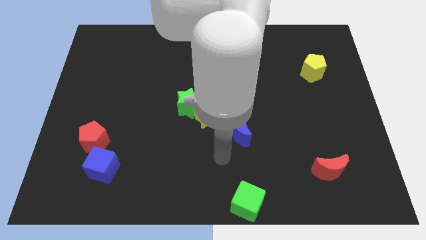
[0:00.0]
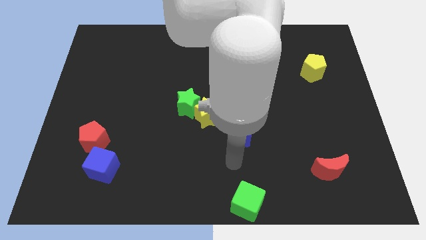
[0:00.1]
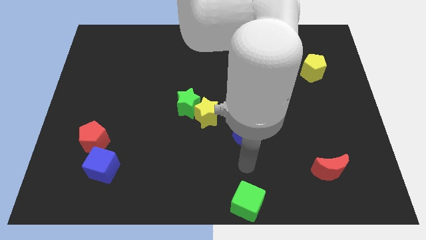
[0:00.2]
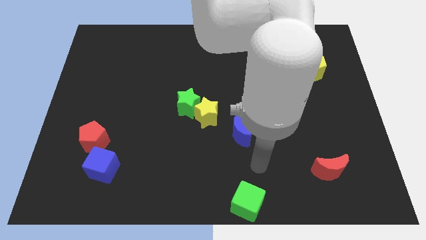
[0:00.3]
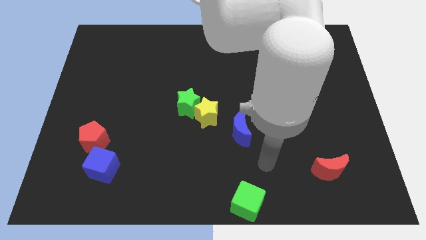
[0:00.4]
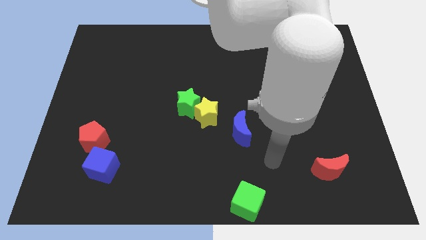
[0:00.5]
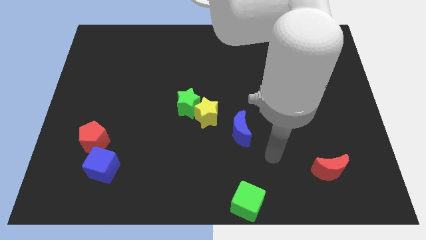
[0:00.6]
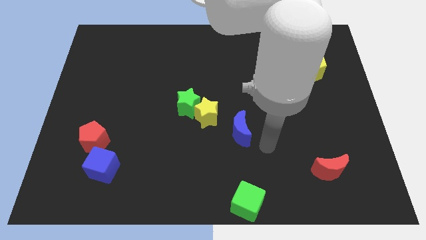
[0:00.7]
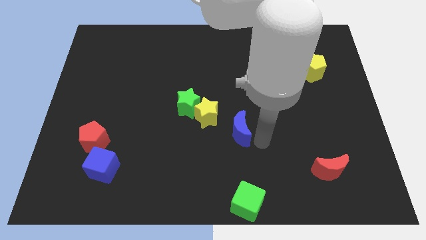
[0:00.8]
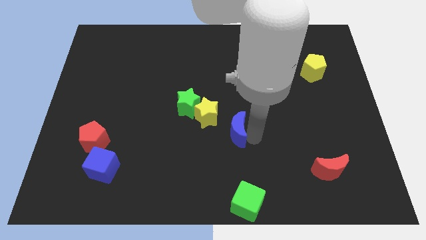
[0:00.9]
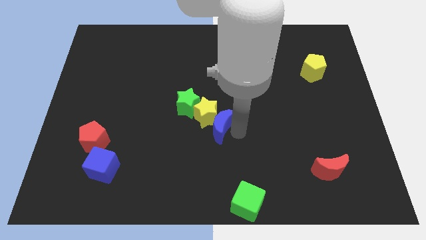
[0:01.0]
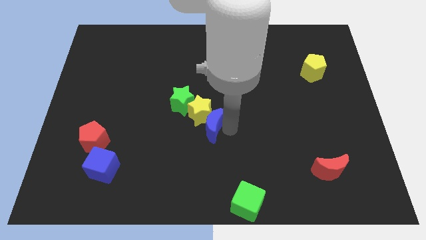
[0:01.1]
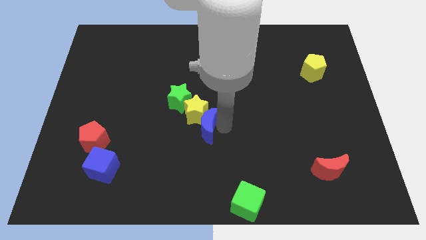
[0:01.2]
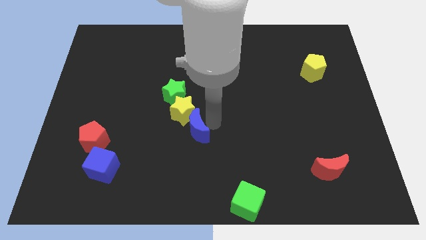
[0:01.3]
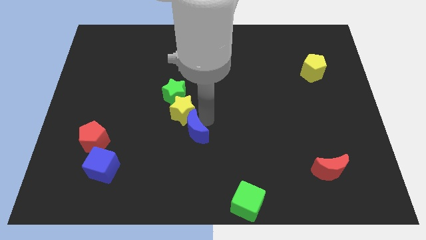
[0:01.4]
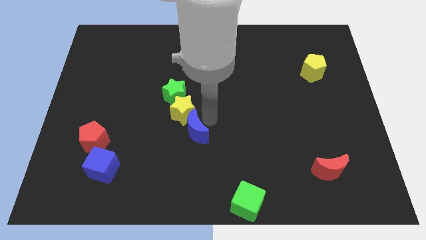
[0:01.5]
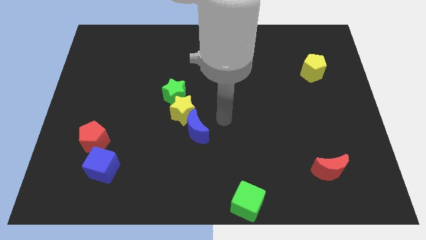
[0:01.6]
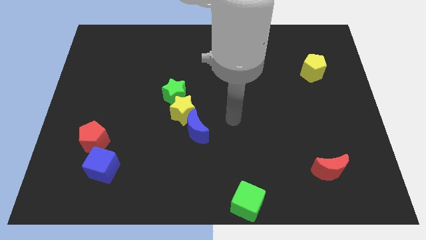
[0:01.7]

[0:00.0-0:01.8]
place blue moon to the bottom of yellow star

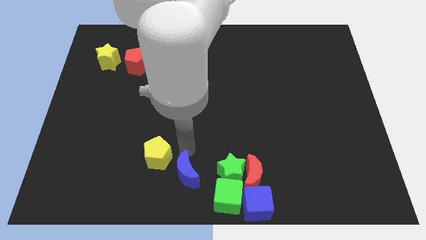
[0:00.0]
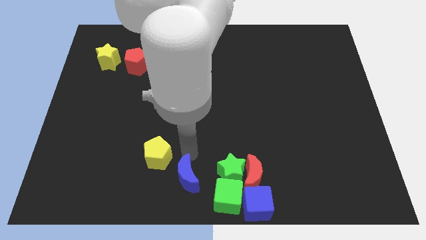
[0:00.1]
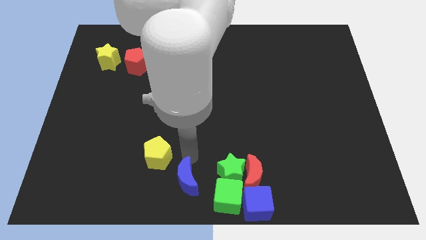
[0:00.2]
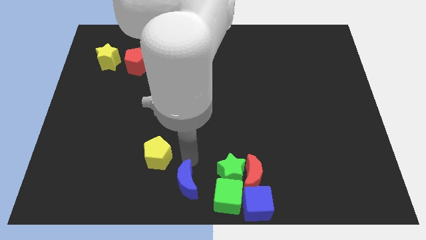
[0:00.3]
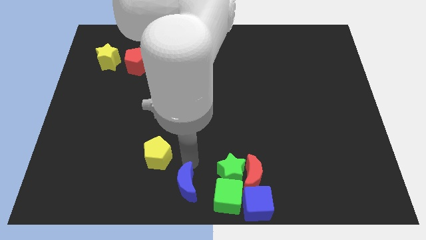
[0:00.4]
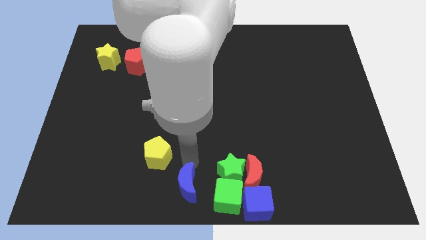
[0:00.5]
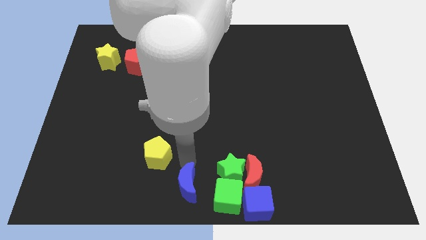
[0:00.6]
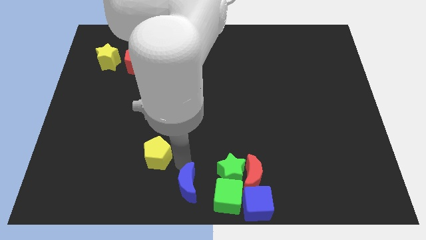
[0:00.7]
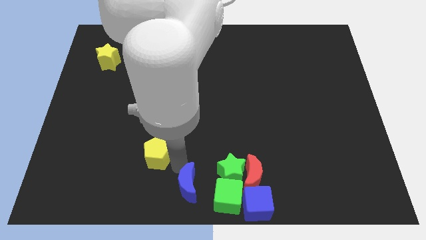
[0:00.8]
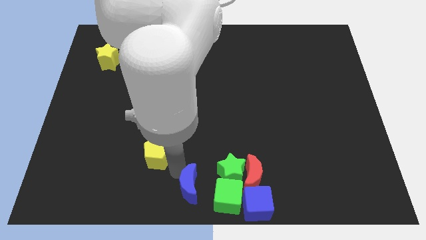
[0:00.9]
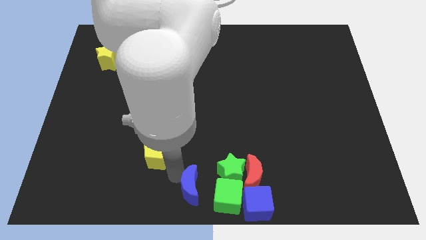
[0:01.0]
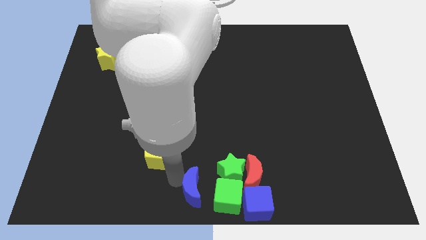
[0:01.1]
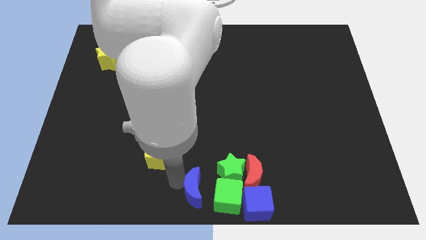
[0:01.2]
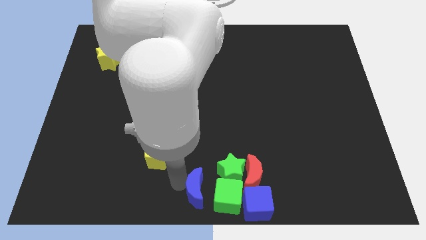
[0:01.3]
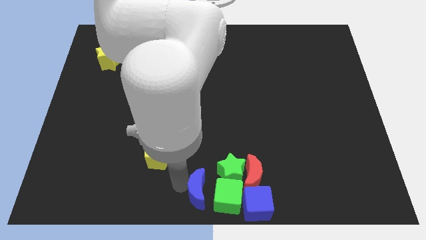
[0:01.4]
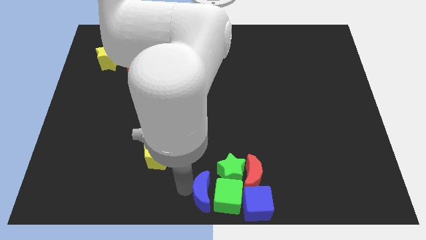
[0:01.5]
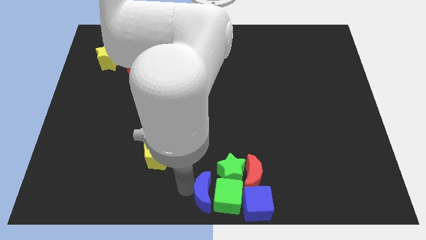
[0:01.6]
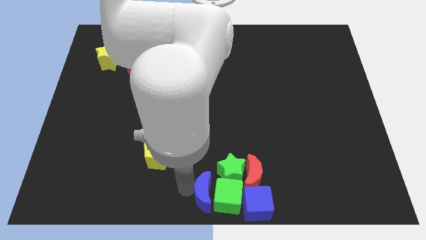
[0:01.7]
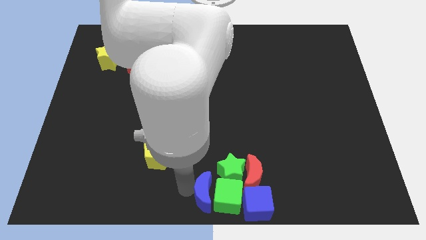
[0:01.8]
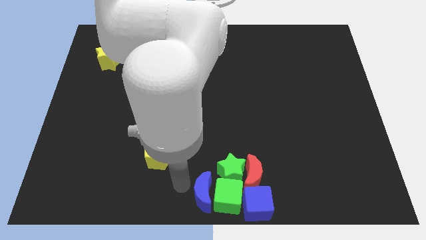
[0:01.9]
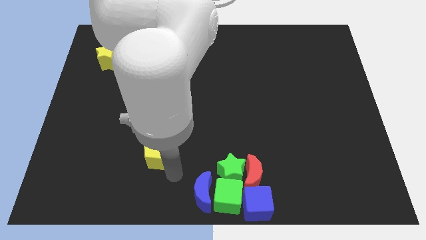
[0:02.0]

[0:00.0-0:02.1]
put the blue moon to the left of green cube

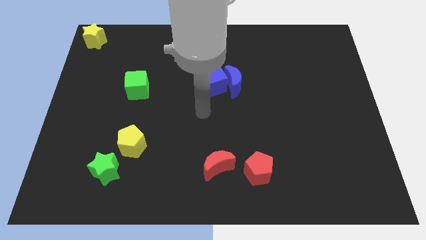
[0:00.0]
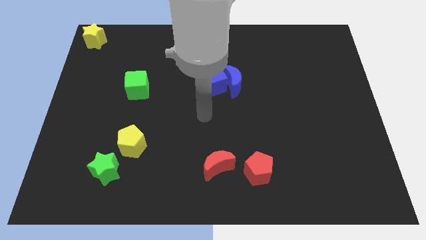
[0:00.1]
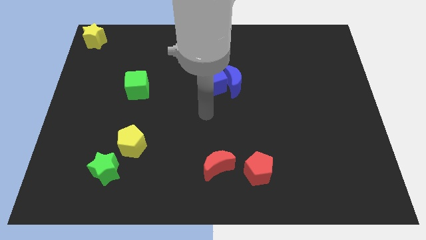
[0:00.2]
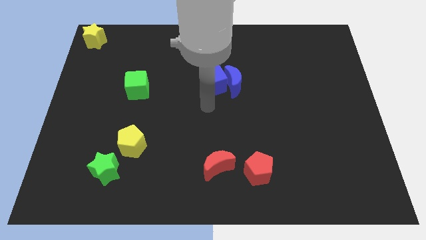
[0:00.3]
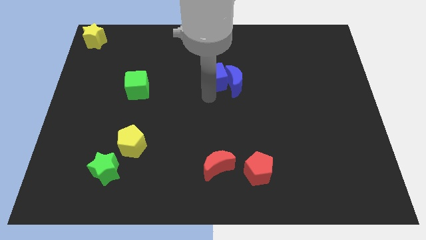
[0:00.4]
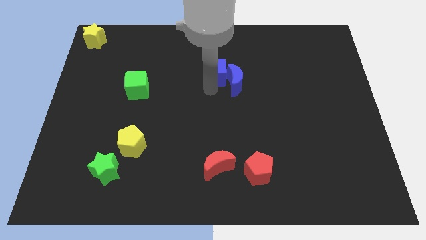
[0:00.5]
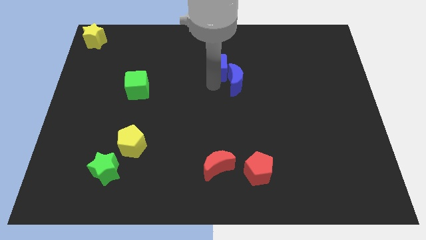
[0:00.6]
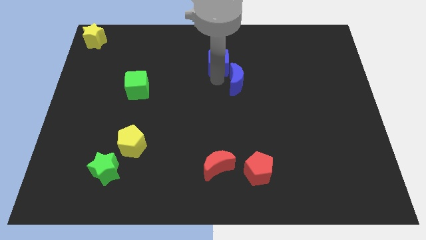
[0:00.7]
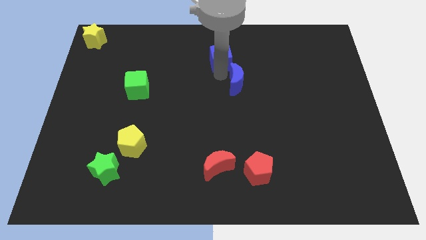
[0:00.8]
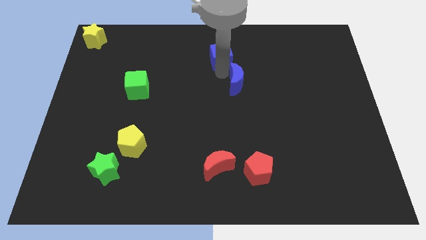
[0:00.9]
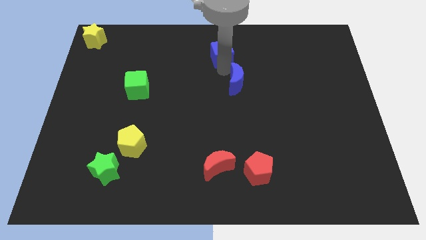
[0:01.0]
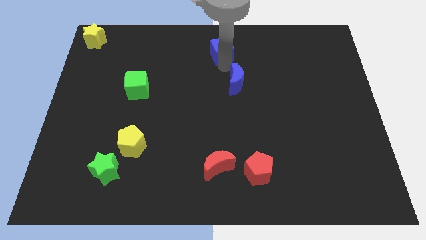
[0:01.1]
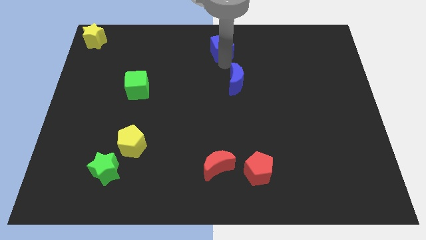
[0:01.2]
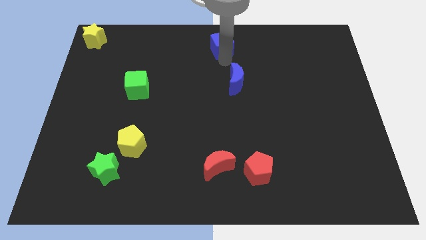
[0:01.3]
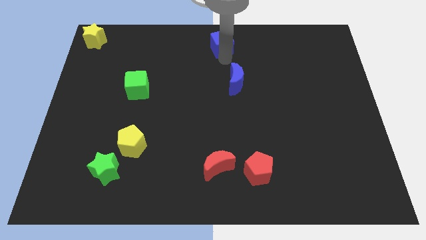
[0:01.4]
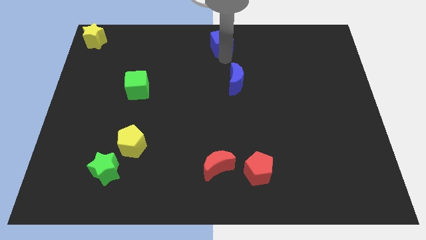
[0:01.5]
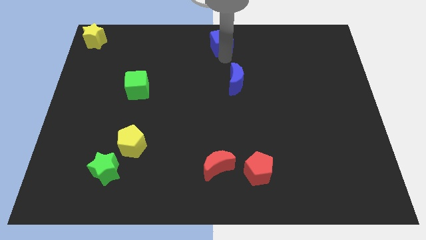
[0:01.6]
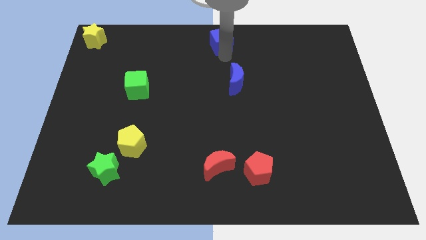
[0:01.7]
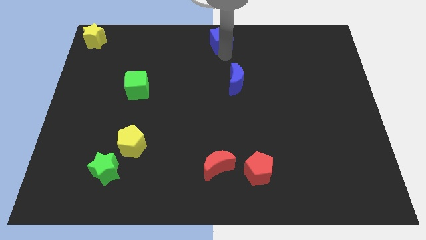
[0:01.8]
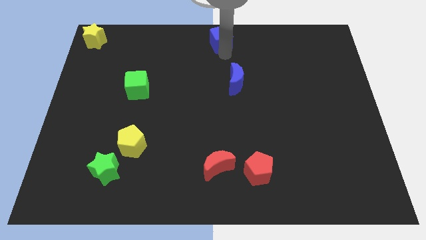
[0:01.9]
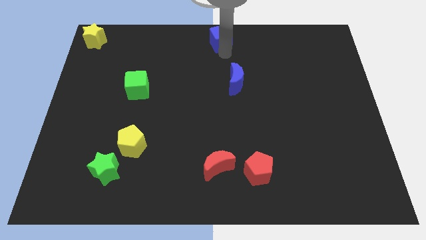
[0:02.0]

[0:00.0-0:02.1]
slide the blue cube to the center top of the board

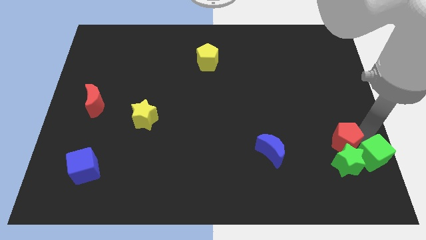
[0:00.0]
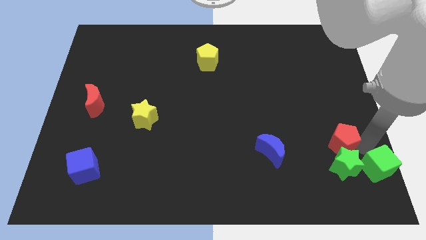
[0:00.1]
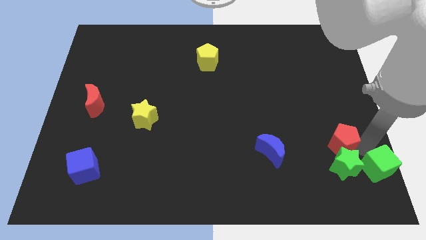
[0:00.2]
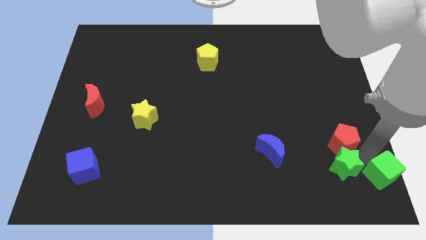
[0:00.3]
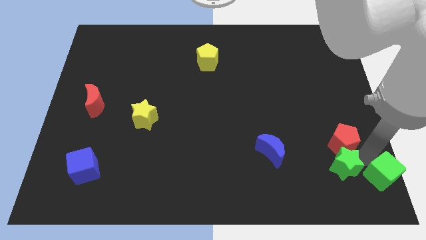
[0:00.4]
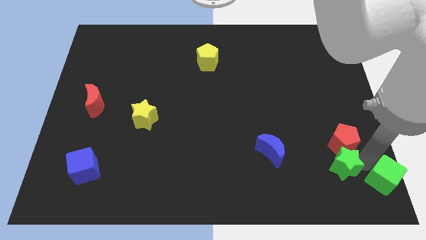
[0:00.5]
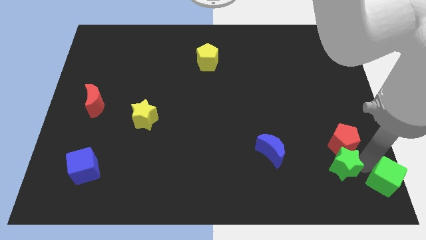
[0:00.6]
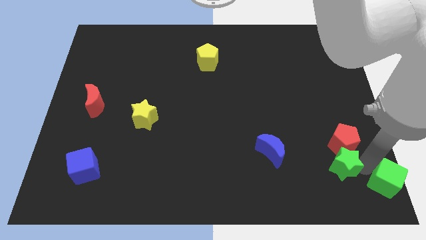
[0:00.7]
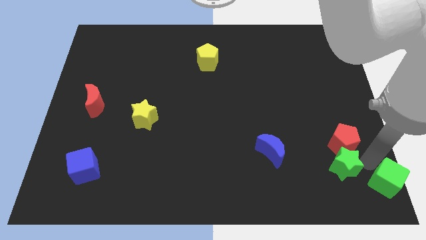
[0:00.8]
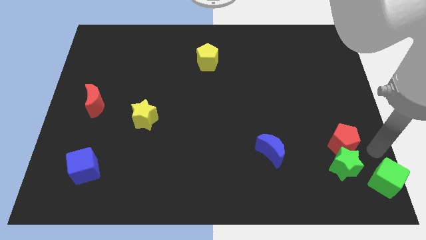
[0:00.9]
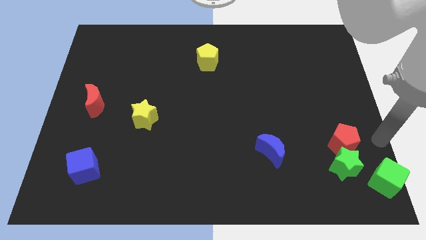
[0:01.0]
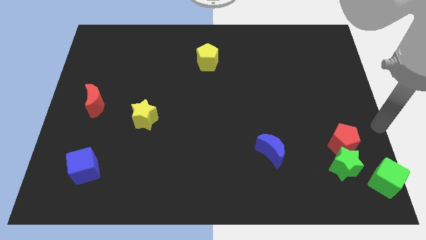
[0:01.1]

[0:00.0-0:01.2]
slightly push the green cube away from the group of blocks

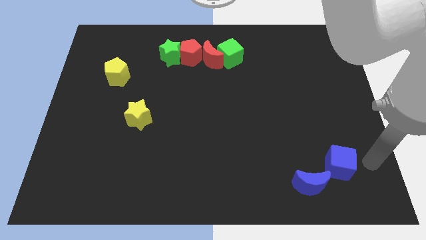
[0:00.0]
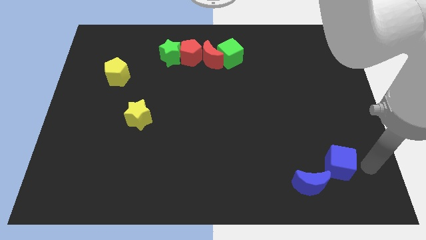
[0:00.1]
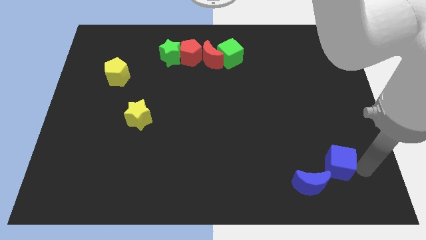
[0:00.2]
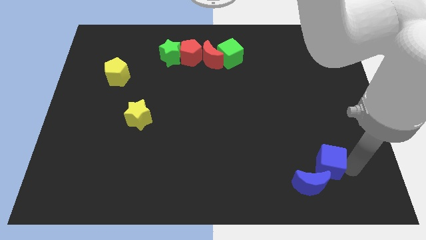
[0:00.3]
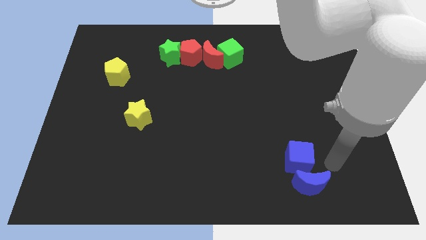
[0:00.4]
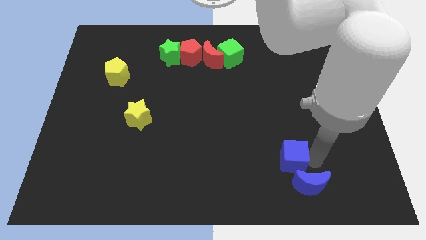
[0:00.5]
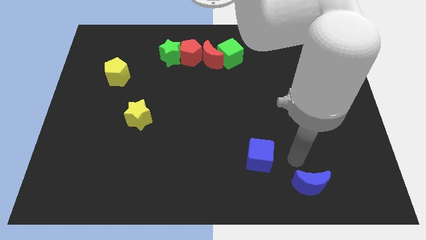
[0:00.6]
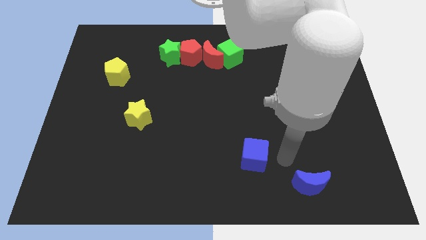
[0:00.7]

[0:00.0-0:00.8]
push the blue cube daignol to the blue crescent

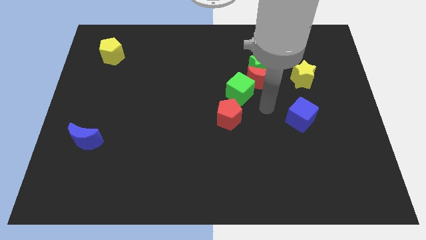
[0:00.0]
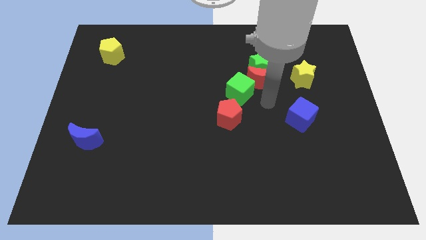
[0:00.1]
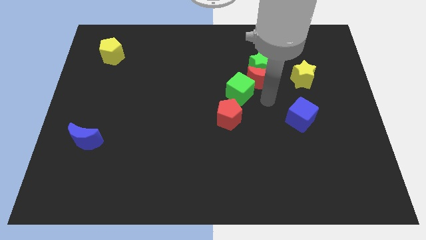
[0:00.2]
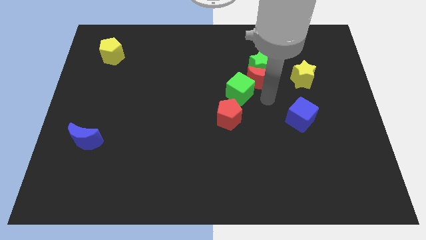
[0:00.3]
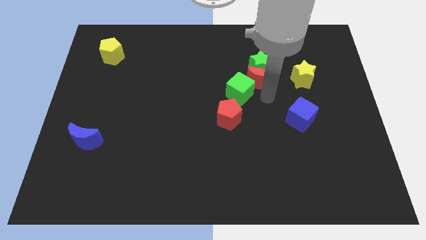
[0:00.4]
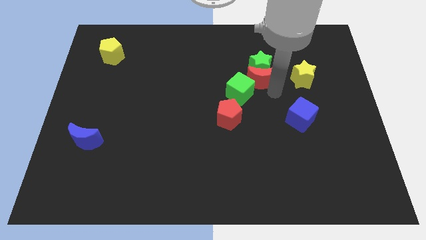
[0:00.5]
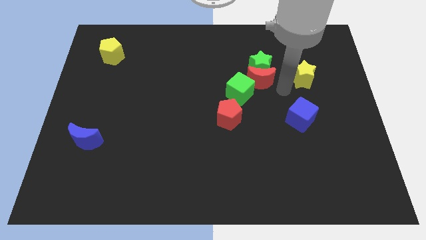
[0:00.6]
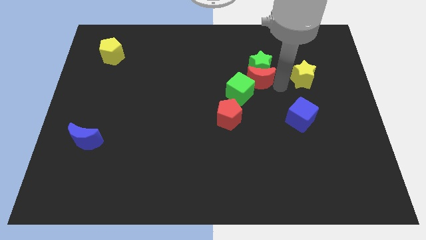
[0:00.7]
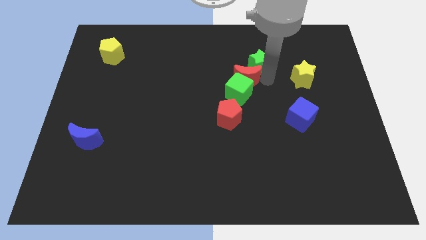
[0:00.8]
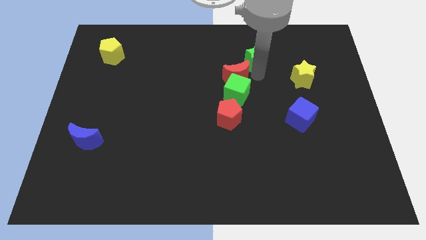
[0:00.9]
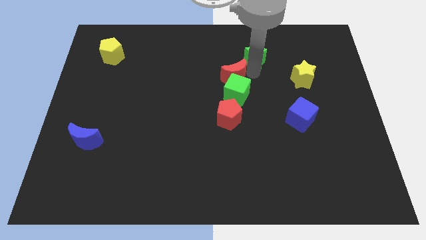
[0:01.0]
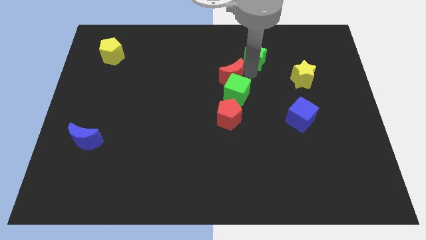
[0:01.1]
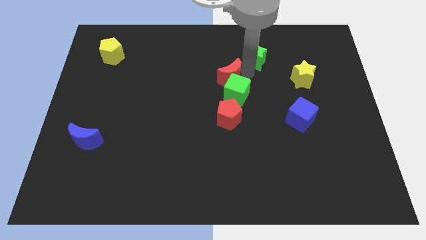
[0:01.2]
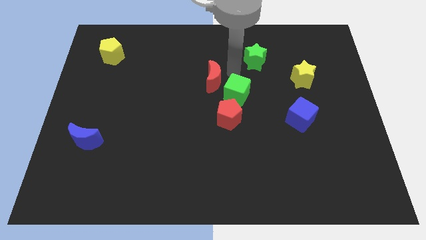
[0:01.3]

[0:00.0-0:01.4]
move red moon above green cube
